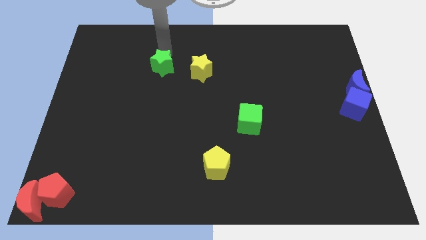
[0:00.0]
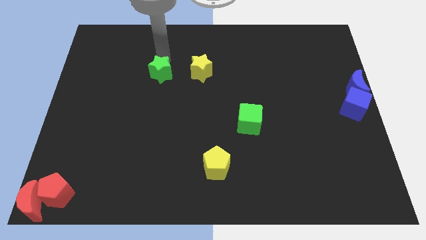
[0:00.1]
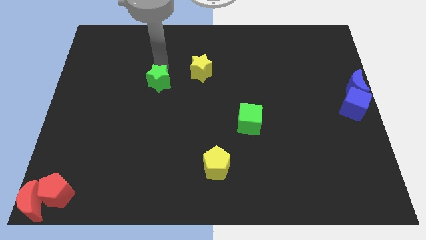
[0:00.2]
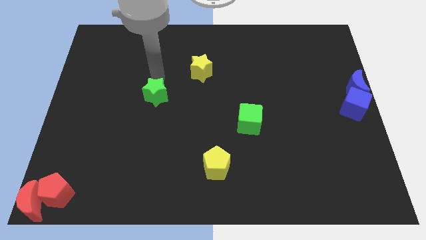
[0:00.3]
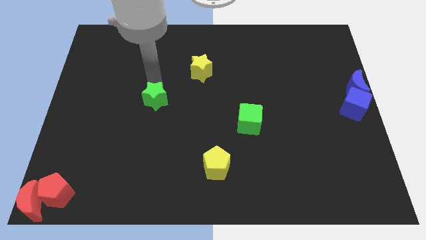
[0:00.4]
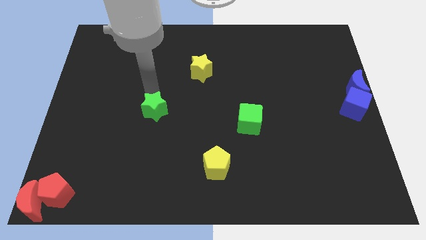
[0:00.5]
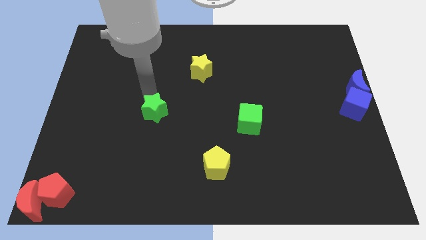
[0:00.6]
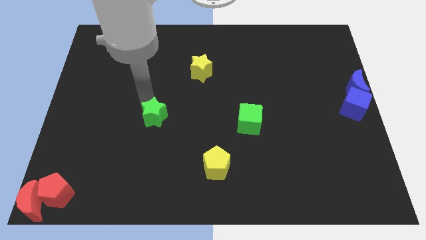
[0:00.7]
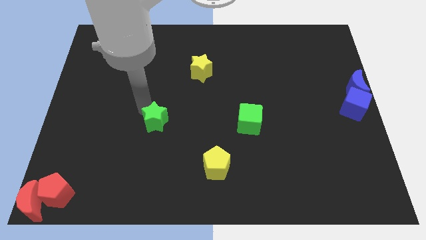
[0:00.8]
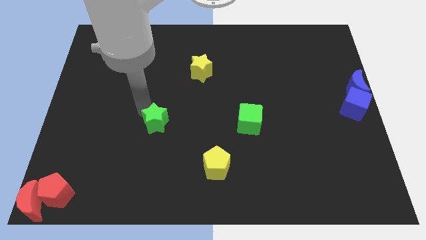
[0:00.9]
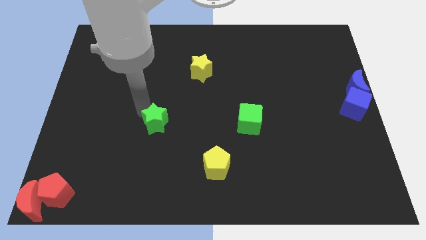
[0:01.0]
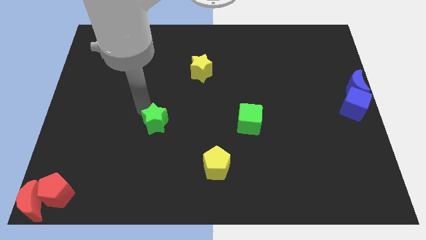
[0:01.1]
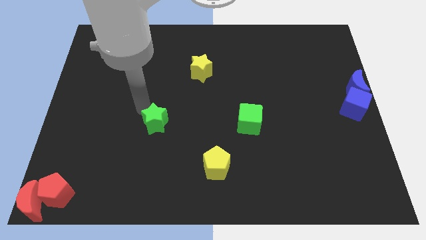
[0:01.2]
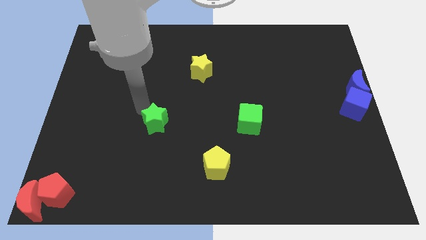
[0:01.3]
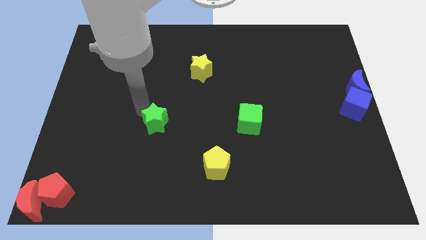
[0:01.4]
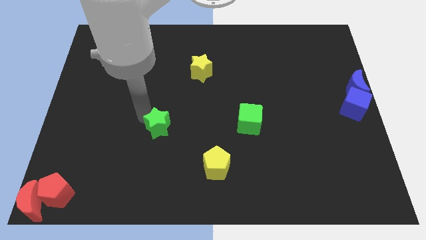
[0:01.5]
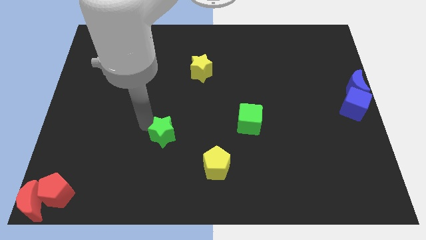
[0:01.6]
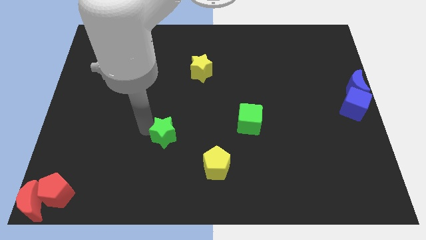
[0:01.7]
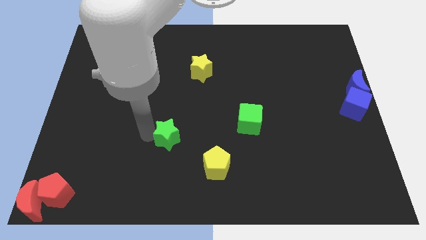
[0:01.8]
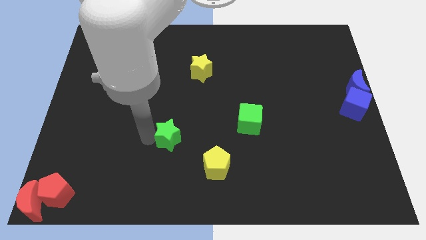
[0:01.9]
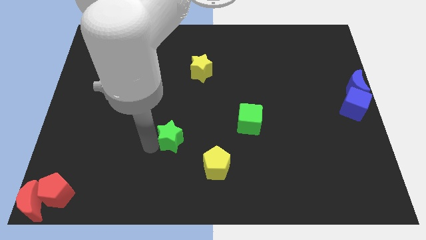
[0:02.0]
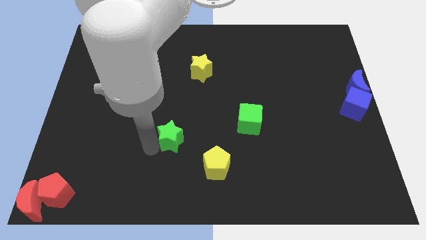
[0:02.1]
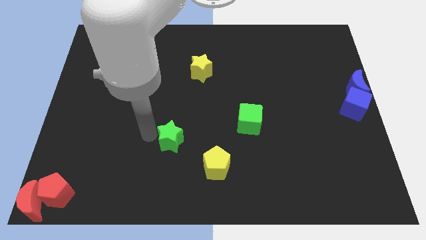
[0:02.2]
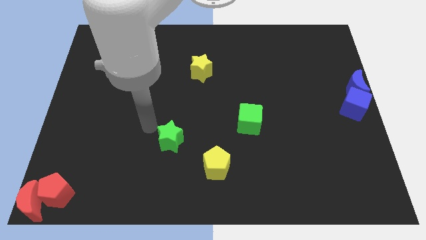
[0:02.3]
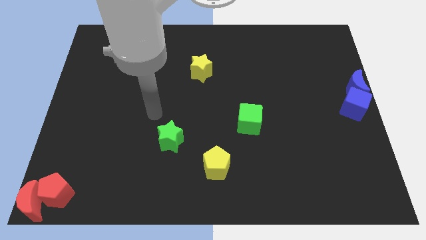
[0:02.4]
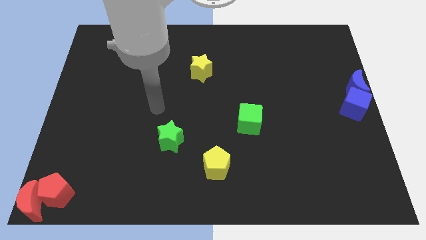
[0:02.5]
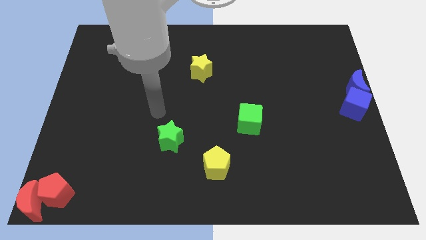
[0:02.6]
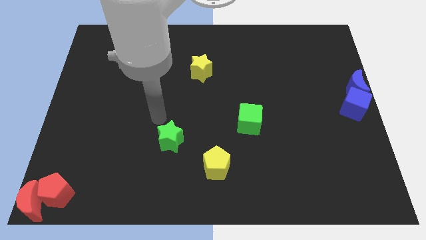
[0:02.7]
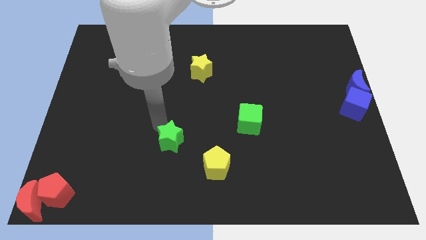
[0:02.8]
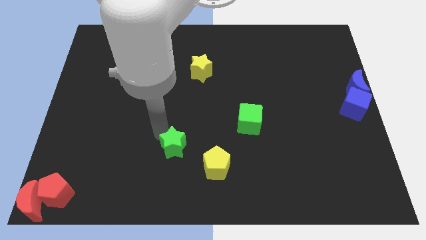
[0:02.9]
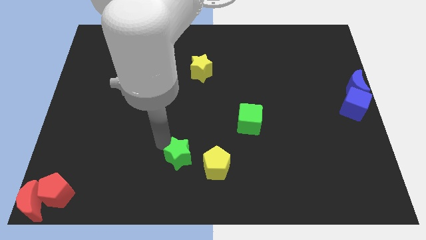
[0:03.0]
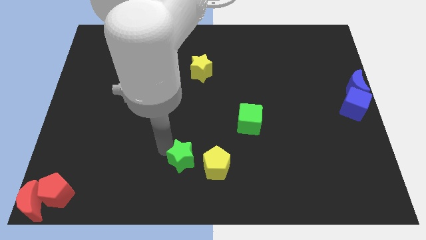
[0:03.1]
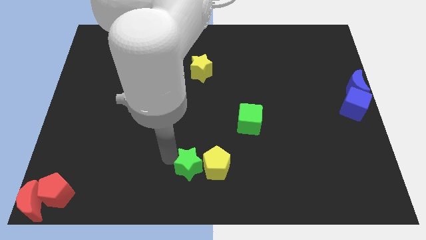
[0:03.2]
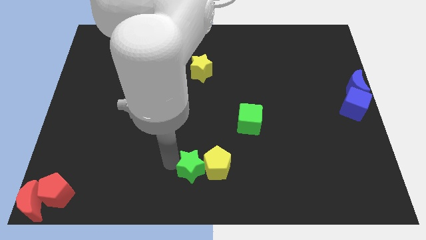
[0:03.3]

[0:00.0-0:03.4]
move green star towards yellow pentagon

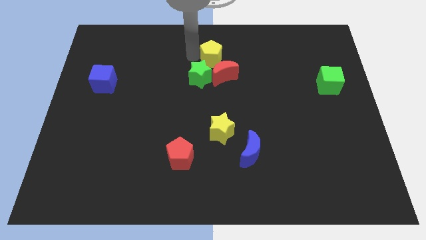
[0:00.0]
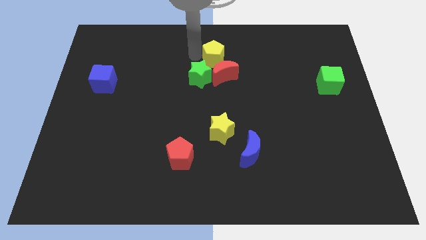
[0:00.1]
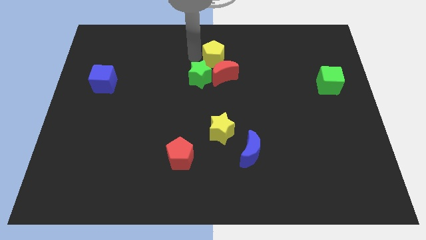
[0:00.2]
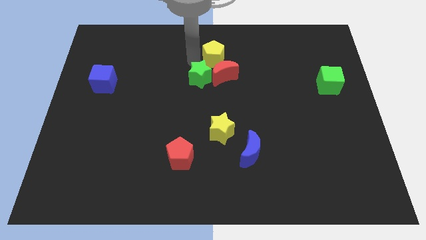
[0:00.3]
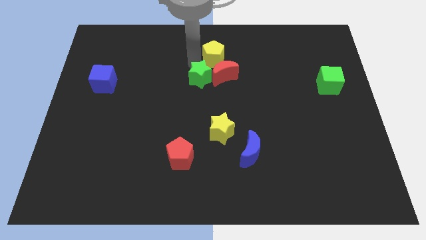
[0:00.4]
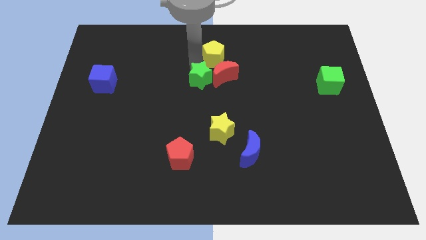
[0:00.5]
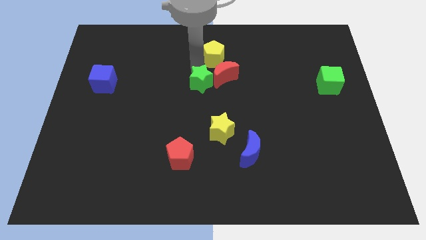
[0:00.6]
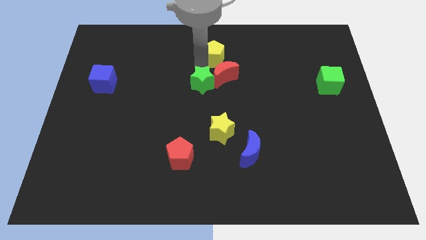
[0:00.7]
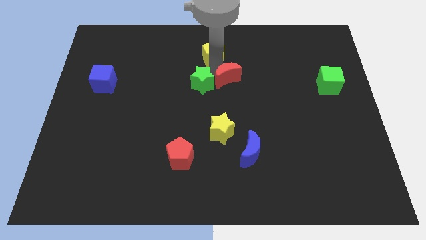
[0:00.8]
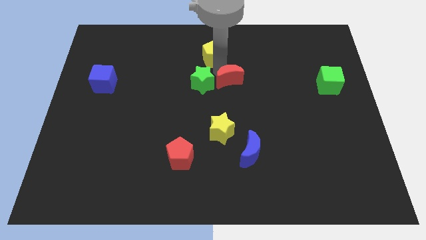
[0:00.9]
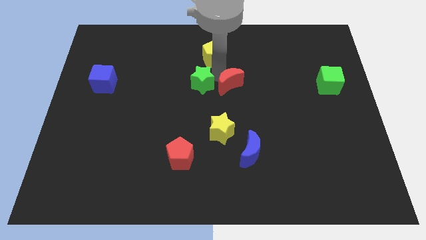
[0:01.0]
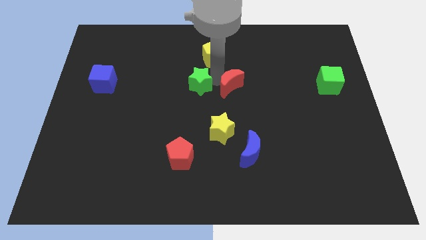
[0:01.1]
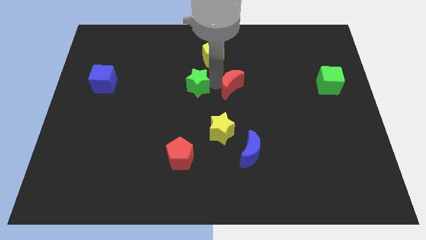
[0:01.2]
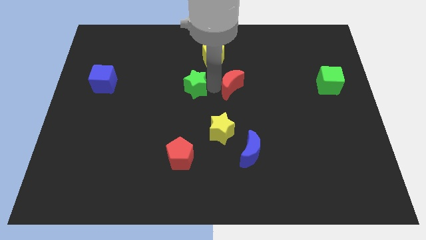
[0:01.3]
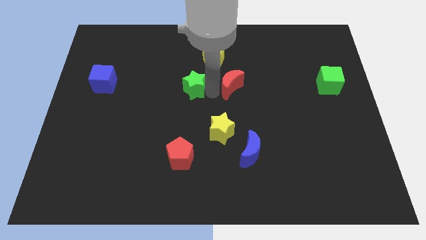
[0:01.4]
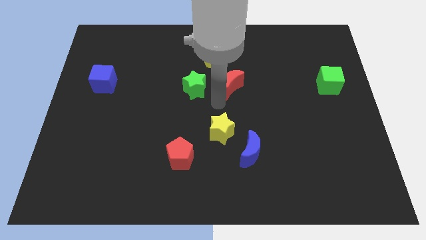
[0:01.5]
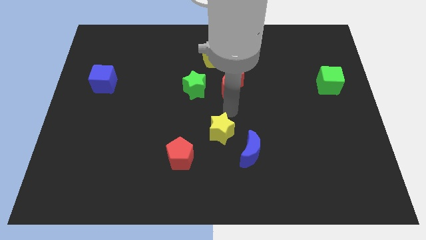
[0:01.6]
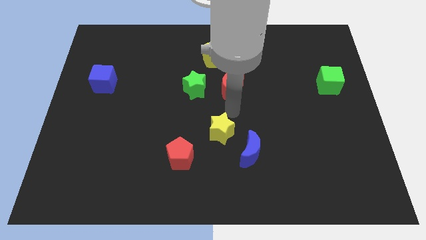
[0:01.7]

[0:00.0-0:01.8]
seperate green star and red moon

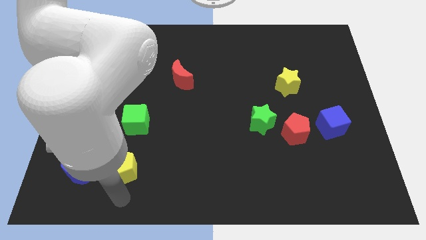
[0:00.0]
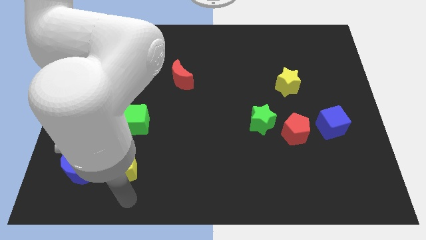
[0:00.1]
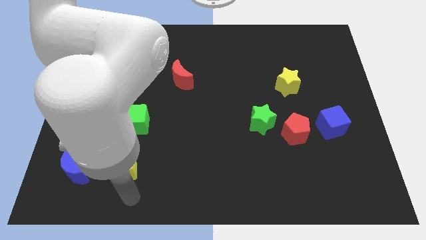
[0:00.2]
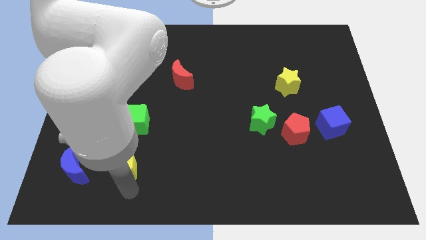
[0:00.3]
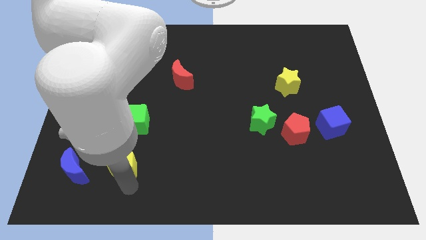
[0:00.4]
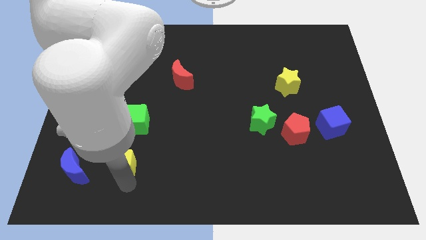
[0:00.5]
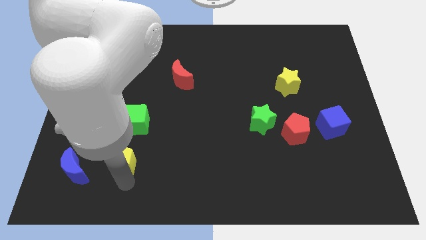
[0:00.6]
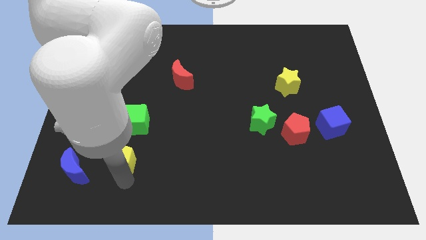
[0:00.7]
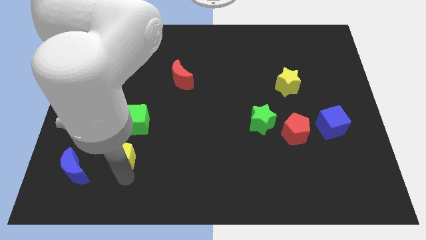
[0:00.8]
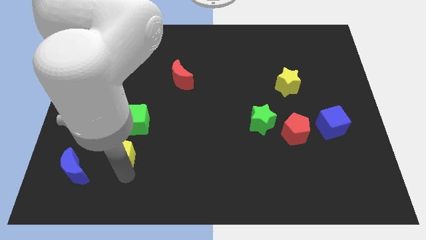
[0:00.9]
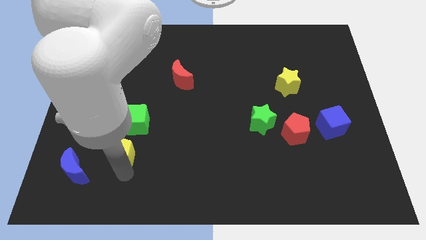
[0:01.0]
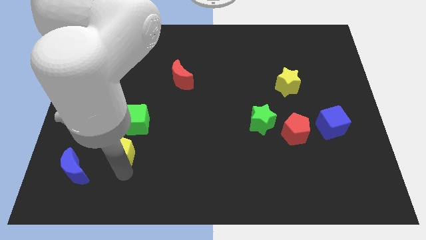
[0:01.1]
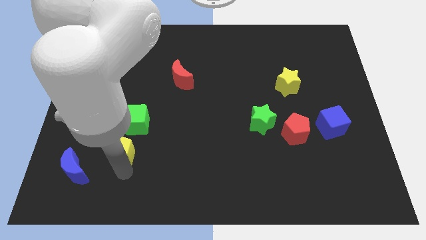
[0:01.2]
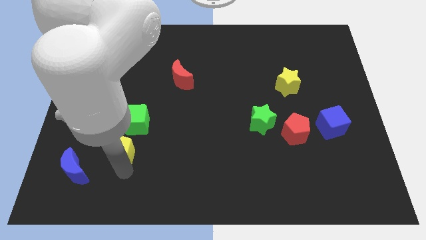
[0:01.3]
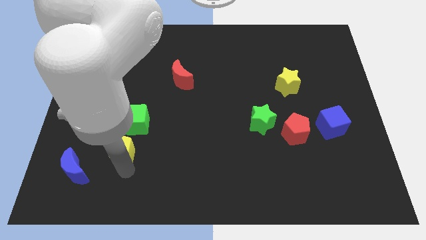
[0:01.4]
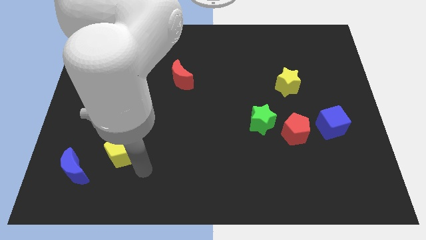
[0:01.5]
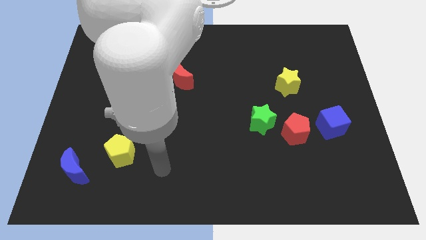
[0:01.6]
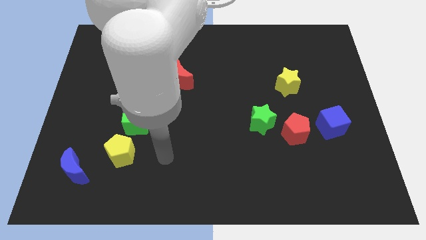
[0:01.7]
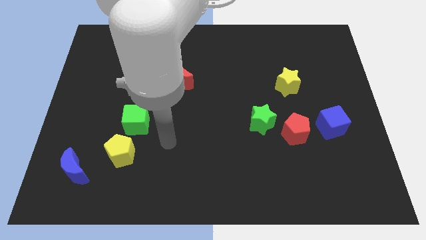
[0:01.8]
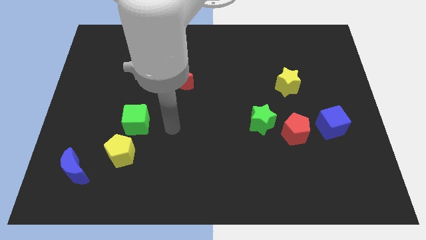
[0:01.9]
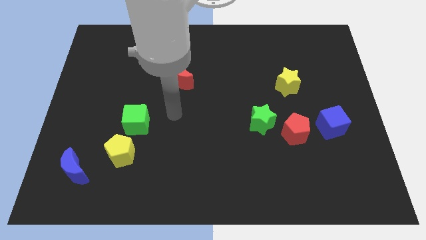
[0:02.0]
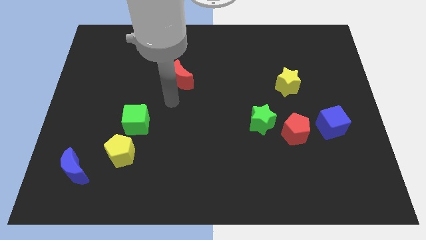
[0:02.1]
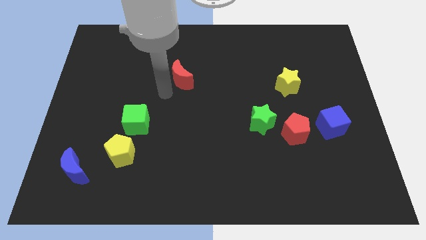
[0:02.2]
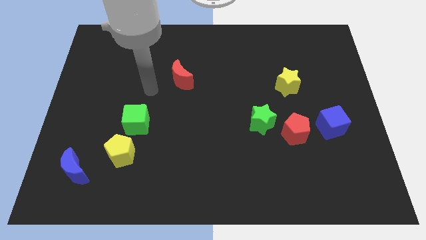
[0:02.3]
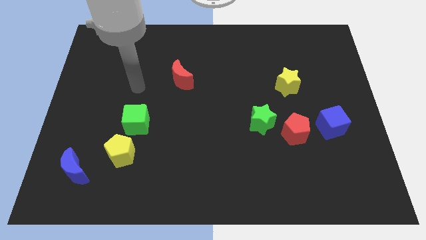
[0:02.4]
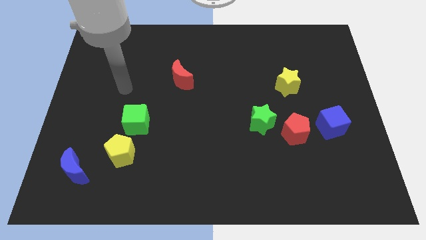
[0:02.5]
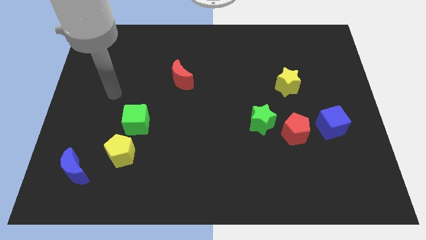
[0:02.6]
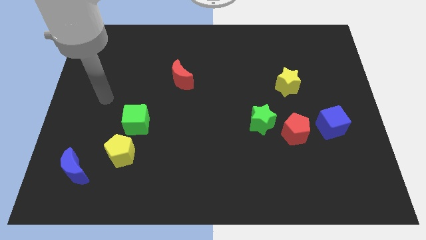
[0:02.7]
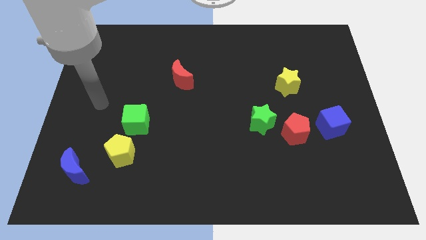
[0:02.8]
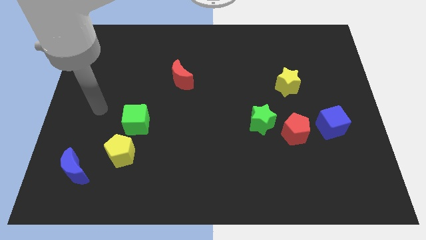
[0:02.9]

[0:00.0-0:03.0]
move the yellow pentagon close to the green cube

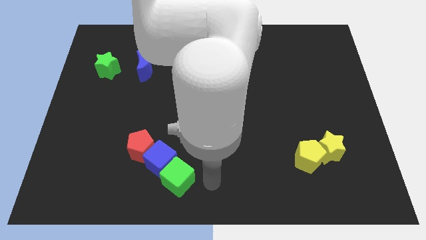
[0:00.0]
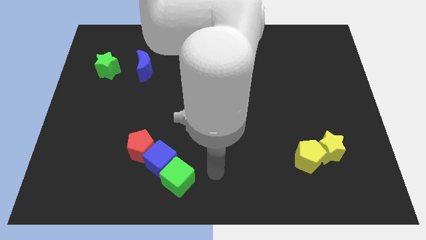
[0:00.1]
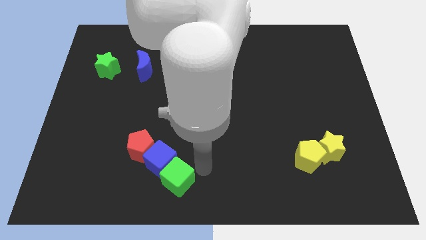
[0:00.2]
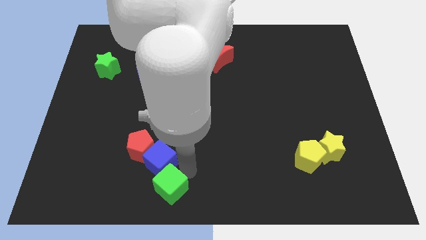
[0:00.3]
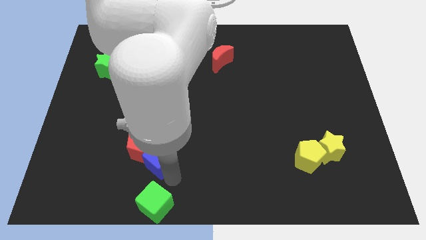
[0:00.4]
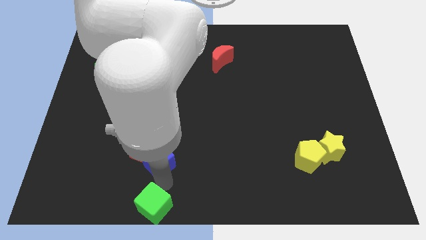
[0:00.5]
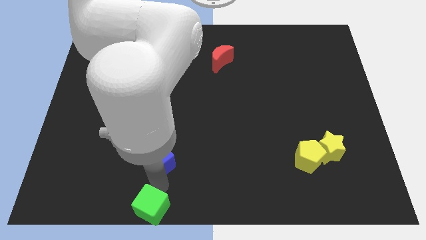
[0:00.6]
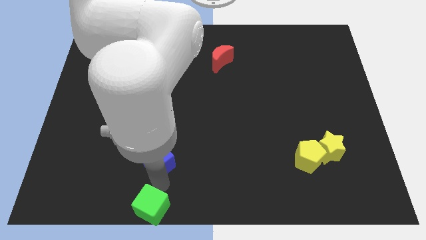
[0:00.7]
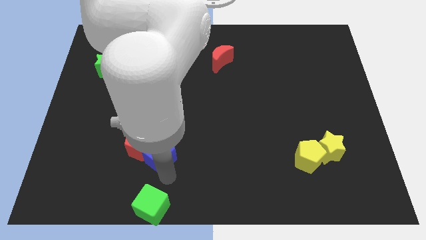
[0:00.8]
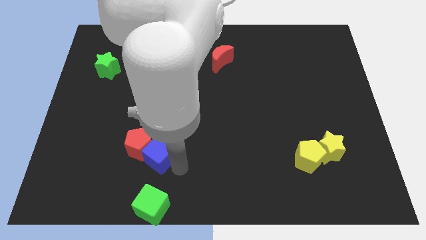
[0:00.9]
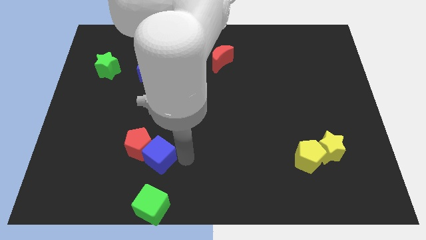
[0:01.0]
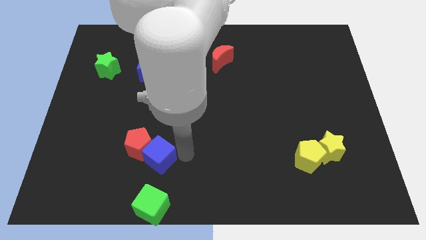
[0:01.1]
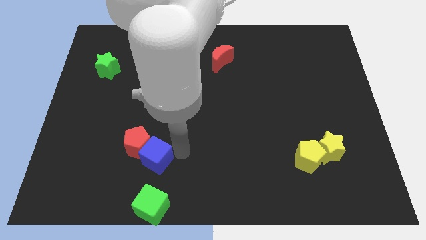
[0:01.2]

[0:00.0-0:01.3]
separate the green cube from the blue cube
